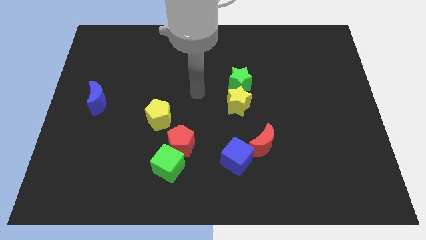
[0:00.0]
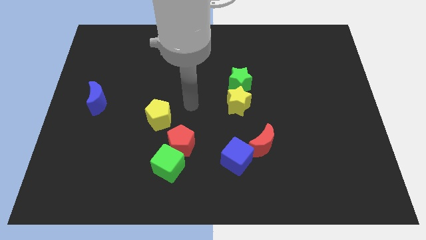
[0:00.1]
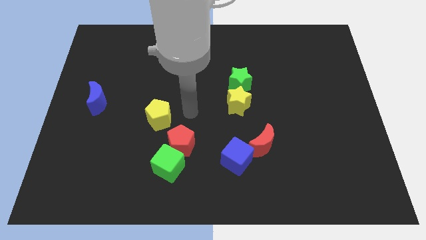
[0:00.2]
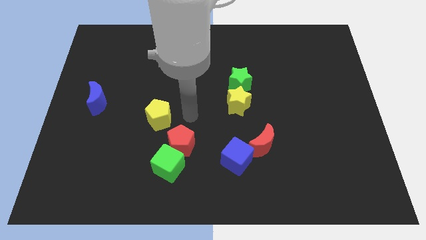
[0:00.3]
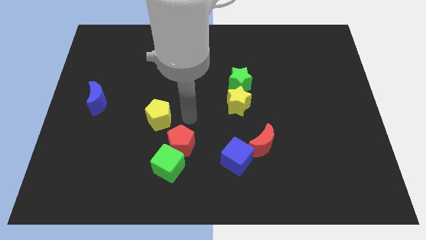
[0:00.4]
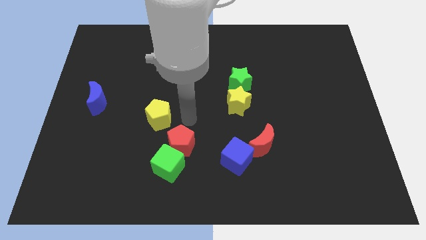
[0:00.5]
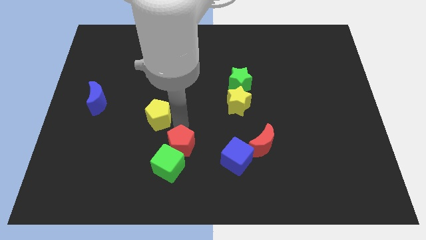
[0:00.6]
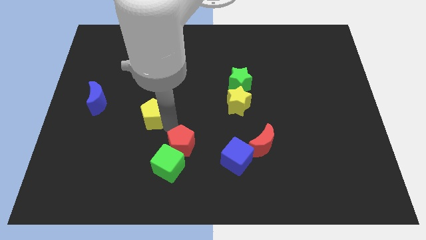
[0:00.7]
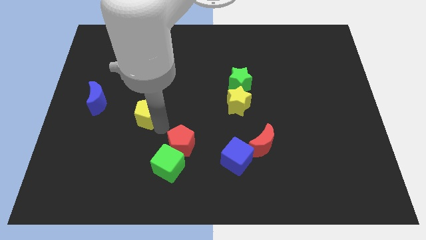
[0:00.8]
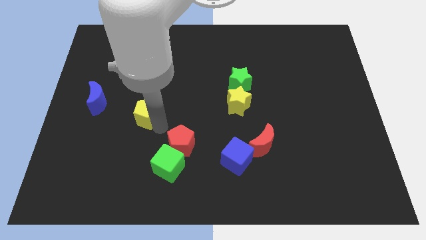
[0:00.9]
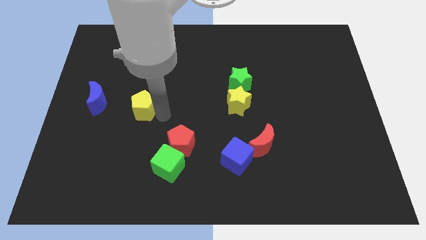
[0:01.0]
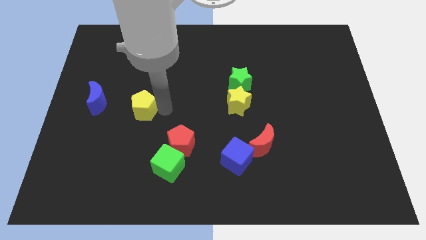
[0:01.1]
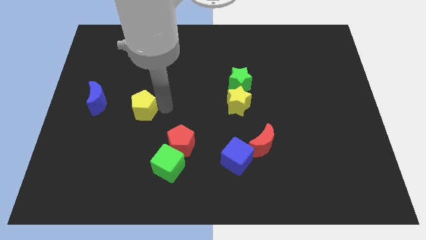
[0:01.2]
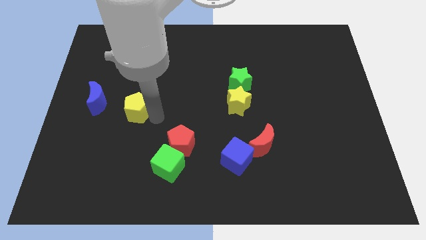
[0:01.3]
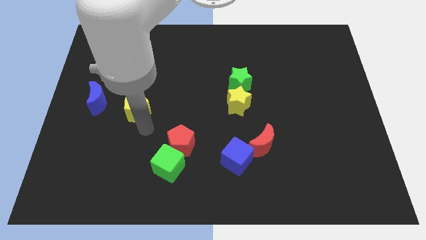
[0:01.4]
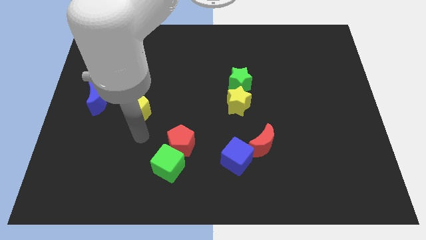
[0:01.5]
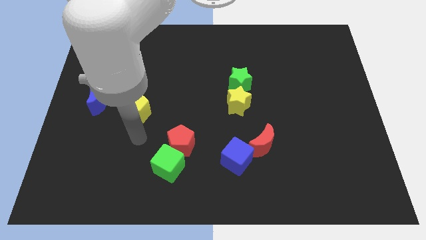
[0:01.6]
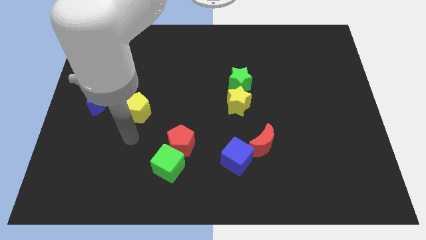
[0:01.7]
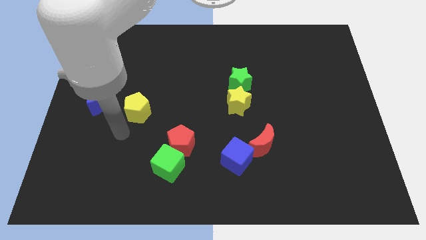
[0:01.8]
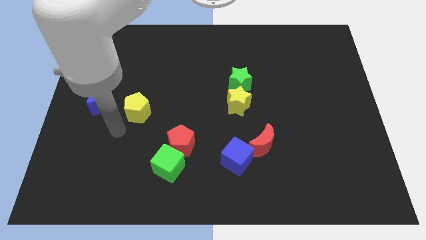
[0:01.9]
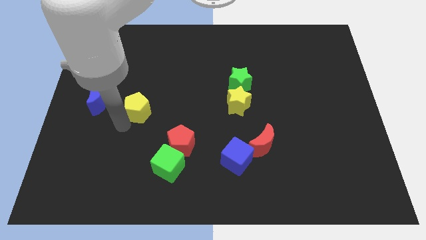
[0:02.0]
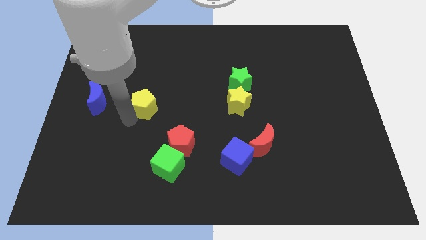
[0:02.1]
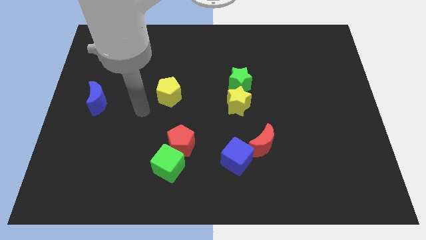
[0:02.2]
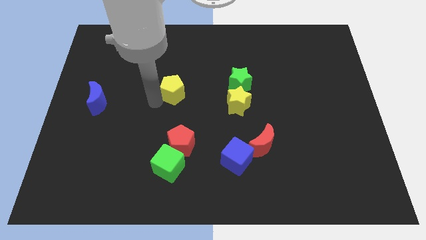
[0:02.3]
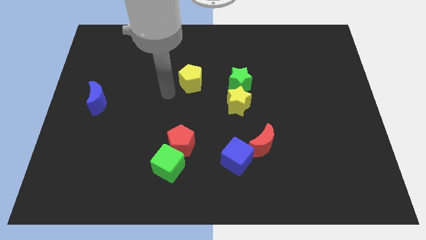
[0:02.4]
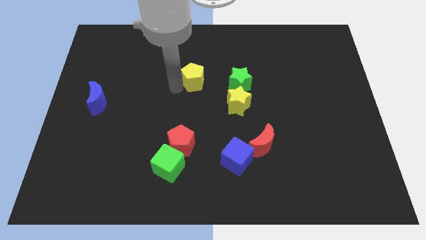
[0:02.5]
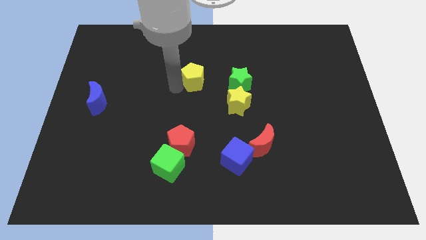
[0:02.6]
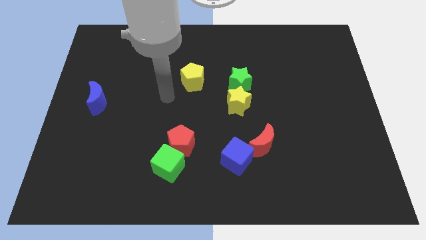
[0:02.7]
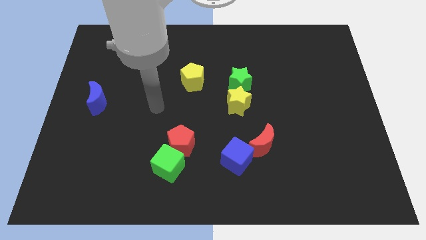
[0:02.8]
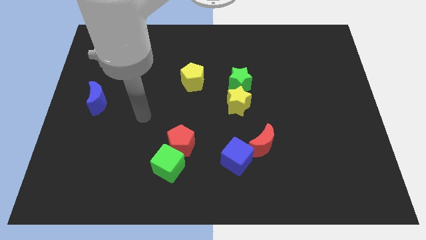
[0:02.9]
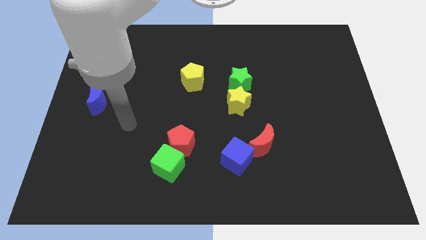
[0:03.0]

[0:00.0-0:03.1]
place the yellow pentagon horizontally to the left side of the green star

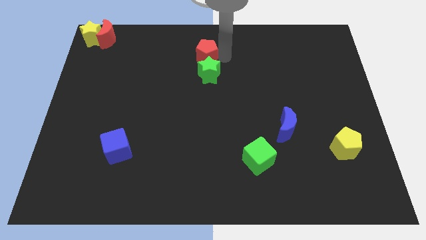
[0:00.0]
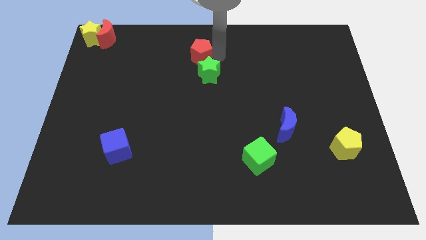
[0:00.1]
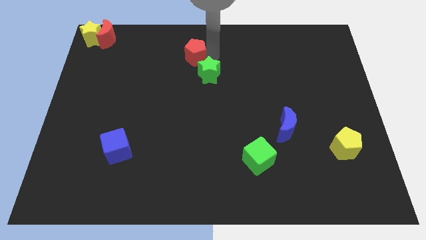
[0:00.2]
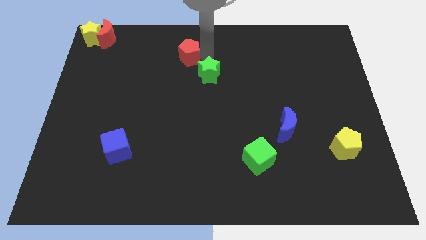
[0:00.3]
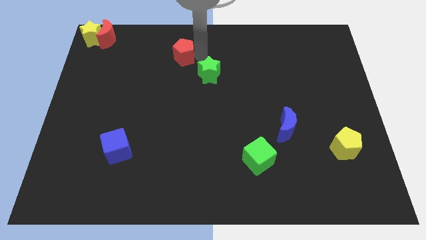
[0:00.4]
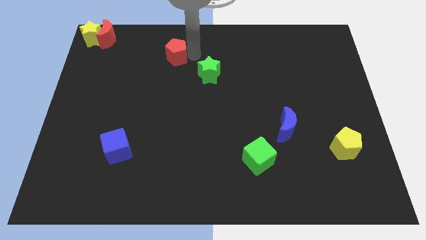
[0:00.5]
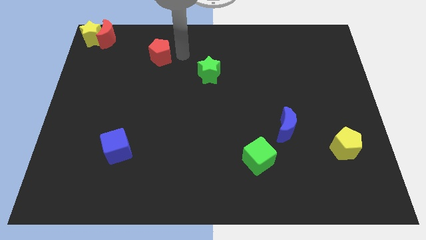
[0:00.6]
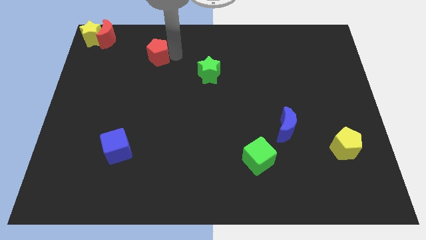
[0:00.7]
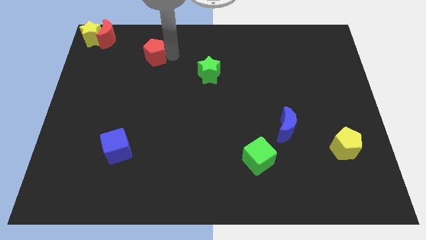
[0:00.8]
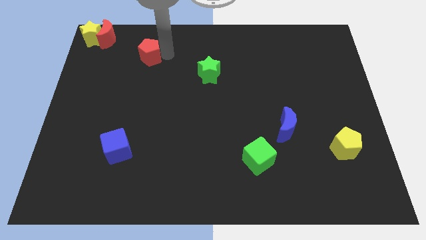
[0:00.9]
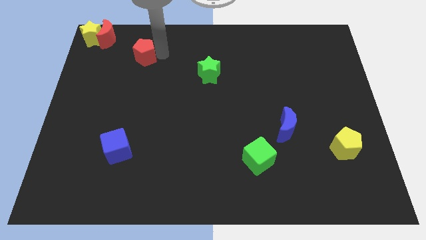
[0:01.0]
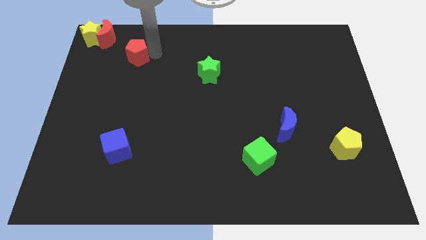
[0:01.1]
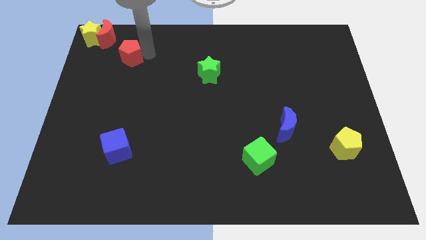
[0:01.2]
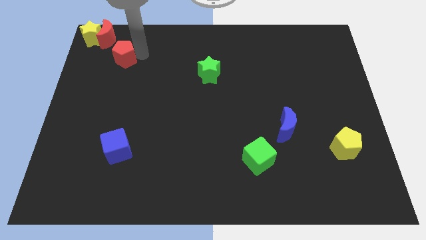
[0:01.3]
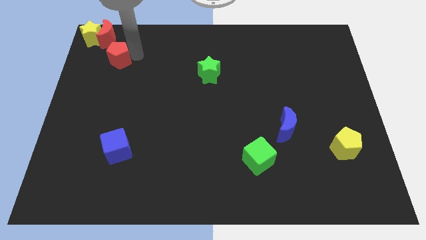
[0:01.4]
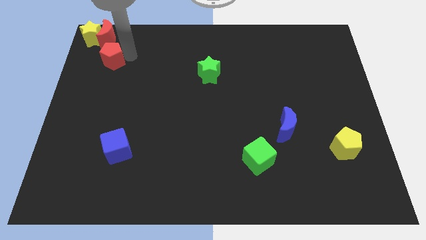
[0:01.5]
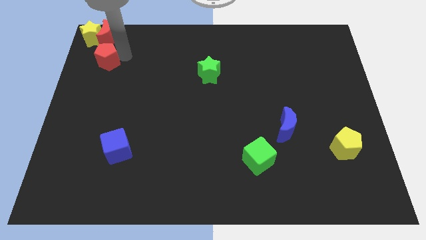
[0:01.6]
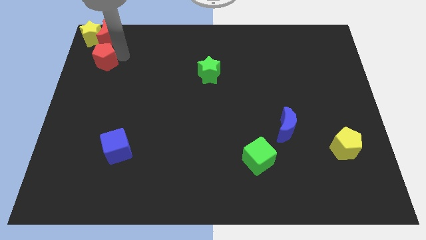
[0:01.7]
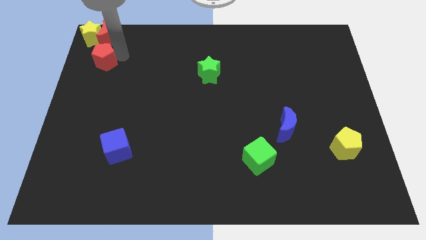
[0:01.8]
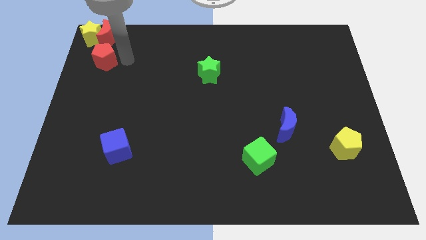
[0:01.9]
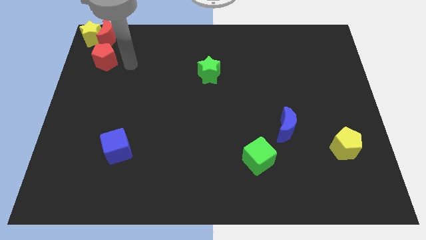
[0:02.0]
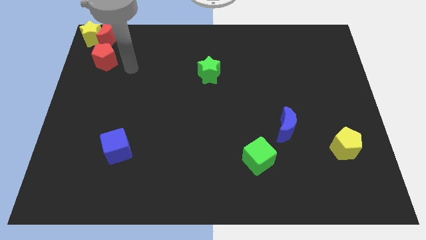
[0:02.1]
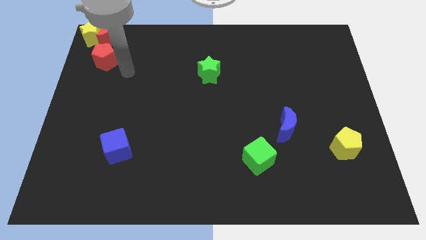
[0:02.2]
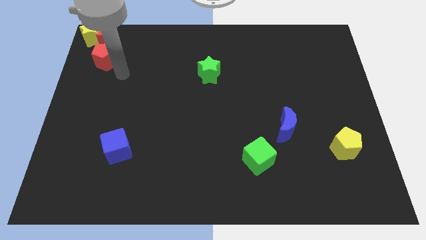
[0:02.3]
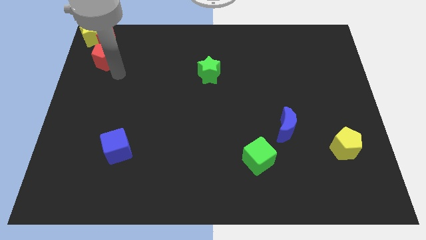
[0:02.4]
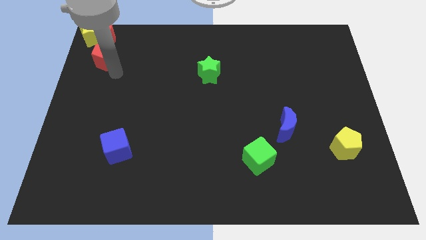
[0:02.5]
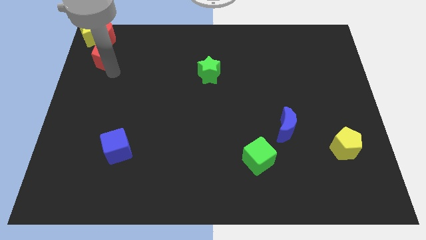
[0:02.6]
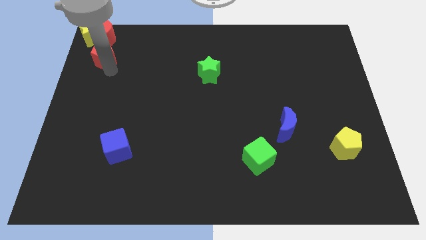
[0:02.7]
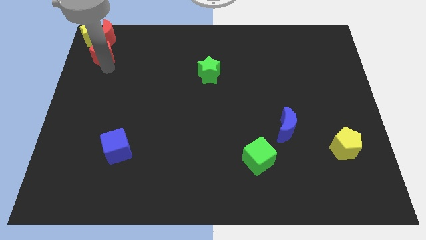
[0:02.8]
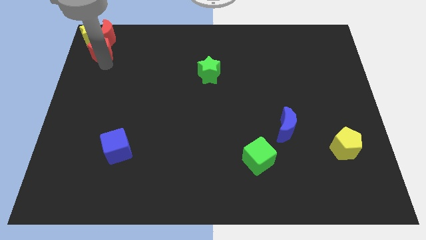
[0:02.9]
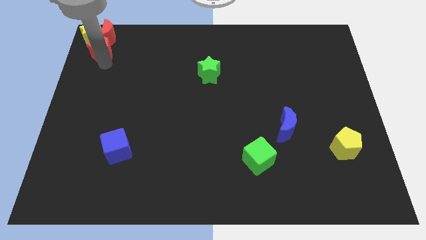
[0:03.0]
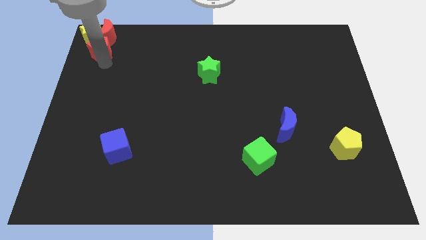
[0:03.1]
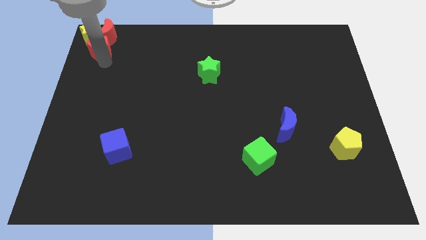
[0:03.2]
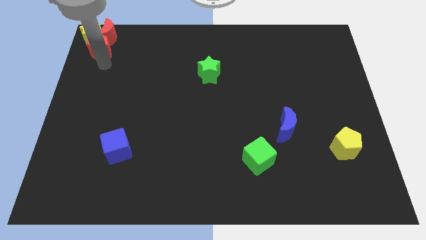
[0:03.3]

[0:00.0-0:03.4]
place the red pentagon at the bottom of red moon

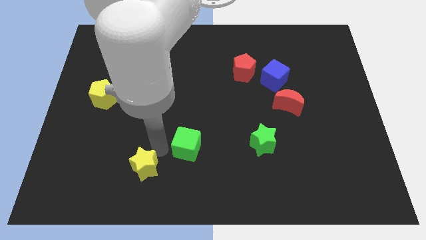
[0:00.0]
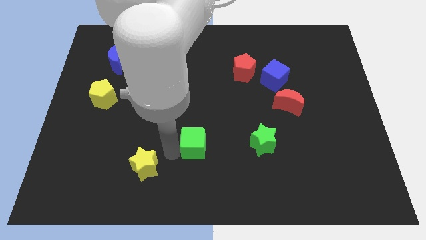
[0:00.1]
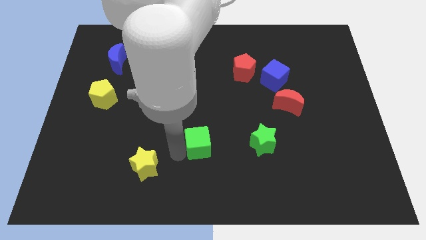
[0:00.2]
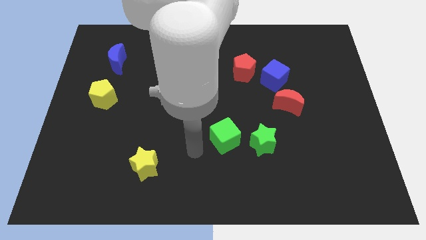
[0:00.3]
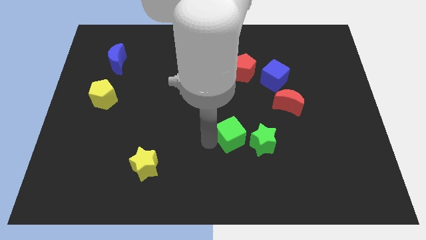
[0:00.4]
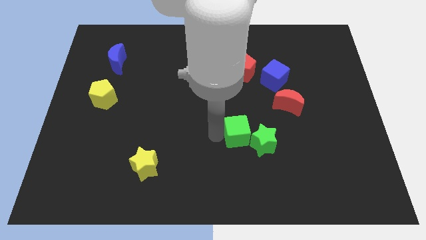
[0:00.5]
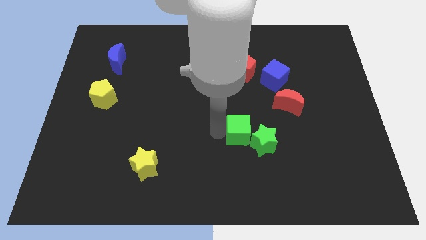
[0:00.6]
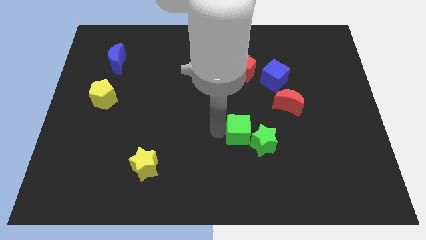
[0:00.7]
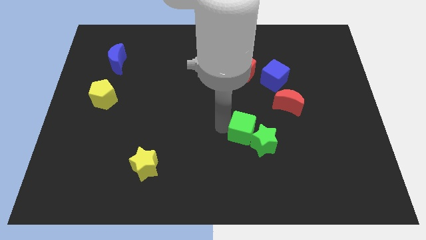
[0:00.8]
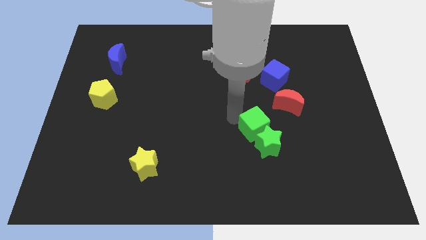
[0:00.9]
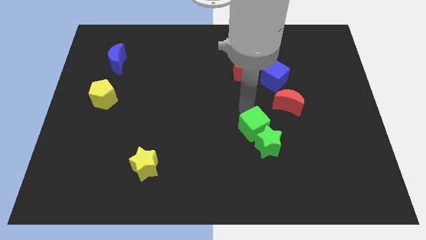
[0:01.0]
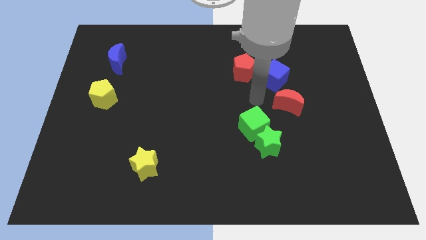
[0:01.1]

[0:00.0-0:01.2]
push the green cube into the green star

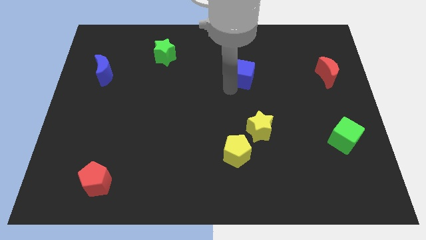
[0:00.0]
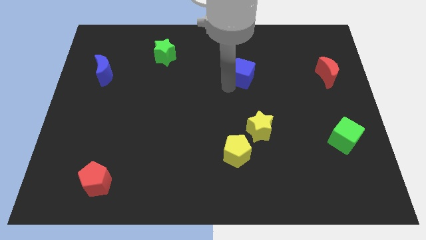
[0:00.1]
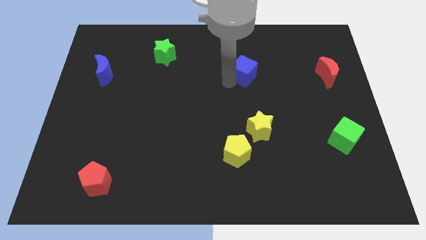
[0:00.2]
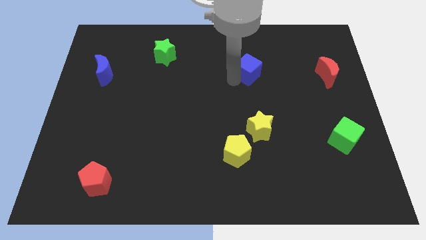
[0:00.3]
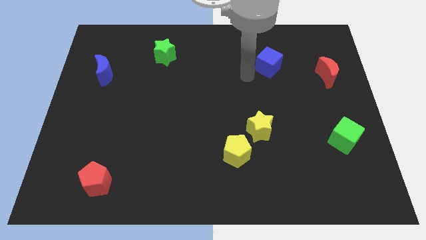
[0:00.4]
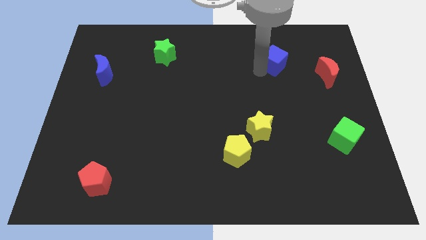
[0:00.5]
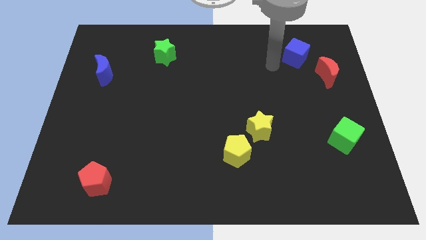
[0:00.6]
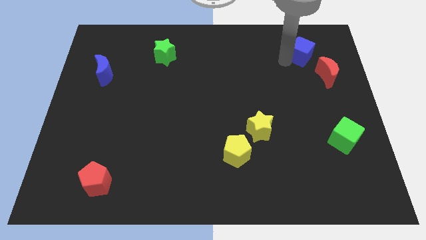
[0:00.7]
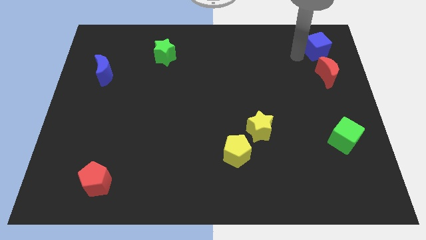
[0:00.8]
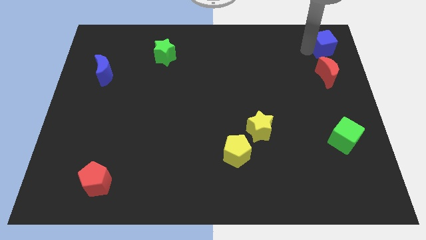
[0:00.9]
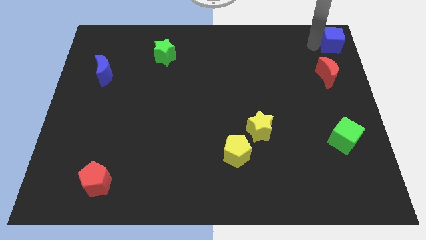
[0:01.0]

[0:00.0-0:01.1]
place the blue cube above the red moon

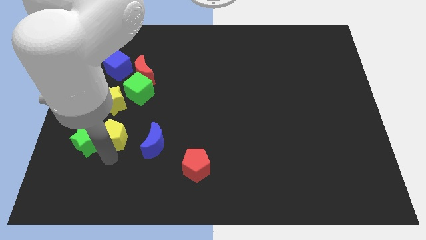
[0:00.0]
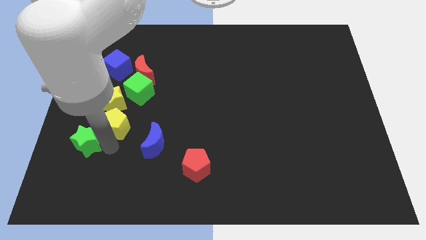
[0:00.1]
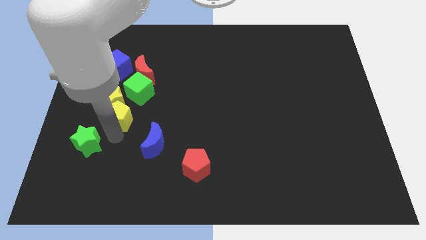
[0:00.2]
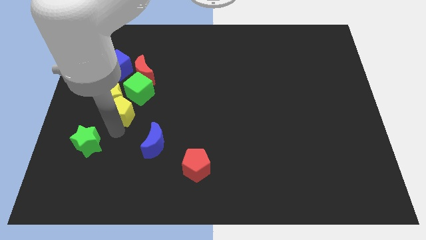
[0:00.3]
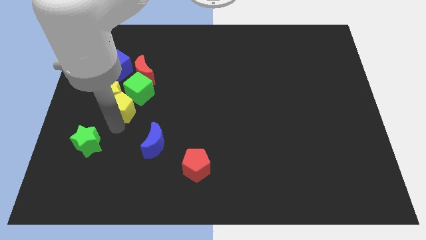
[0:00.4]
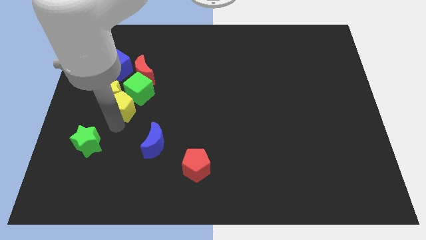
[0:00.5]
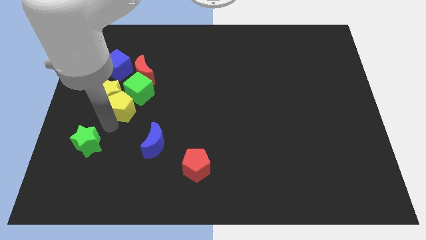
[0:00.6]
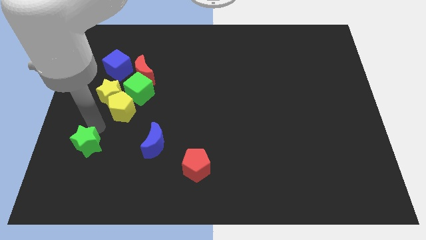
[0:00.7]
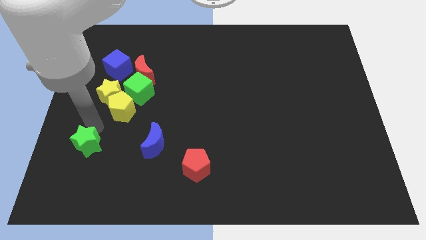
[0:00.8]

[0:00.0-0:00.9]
push the yellow pentagon into the yellow star
